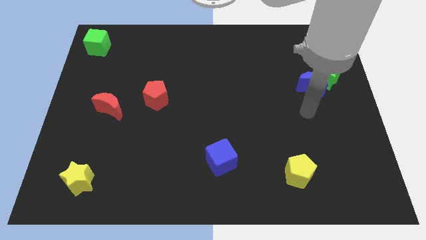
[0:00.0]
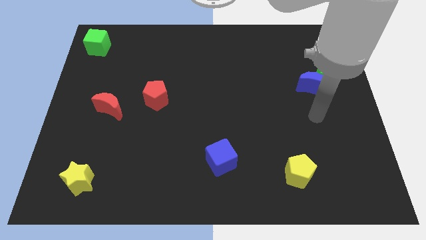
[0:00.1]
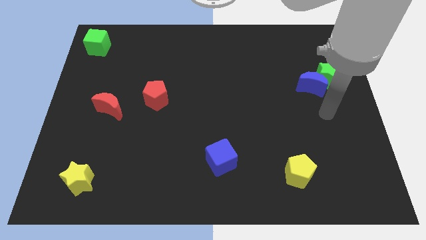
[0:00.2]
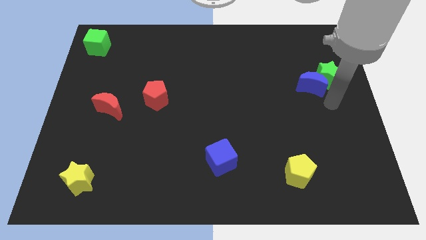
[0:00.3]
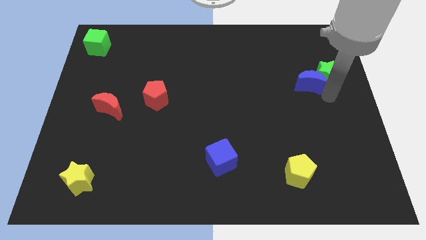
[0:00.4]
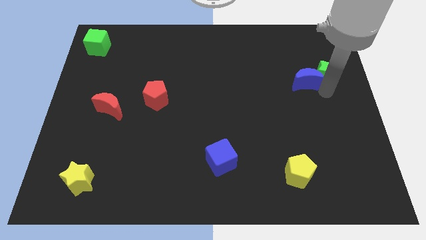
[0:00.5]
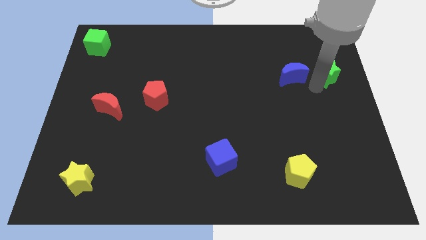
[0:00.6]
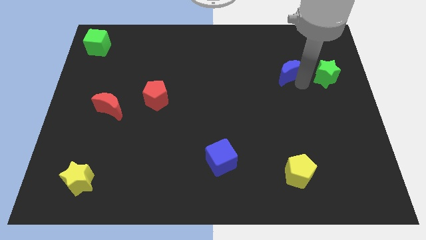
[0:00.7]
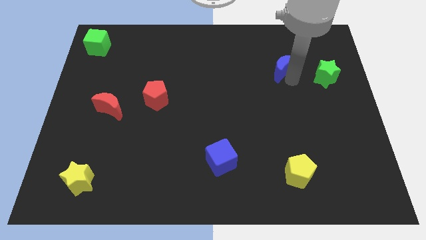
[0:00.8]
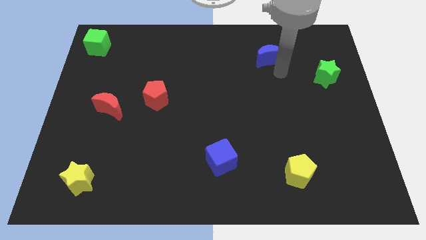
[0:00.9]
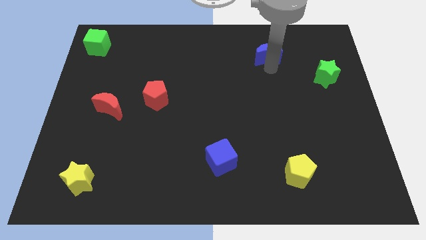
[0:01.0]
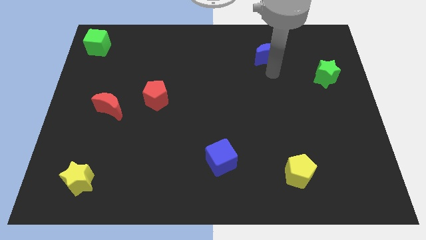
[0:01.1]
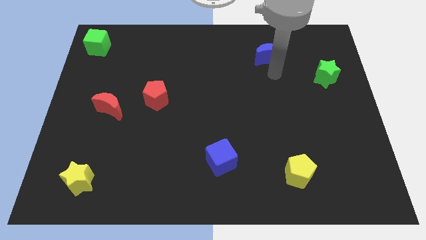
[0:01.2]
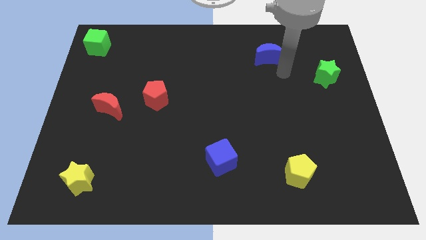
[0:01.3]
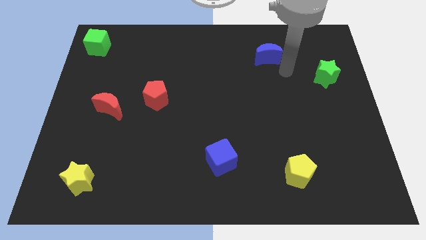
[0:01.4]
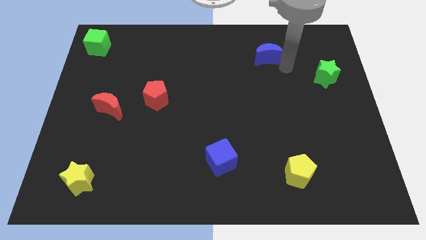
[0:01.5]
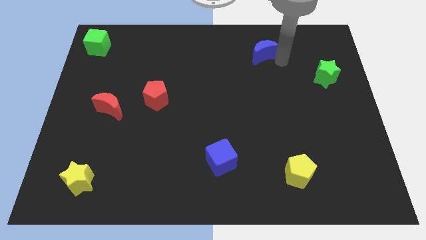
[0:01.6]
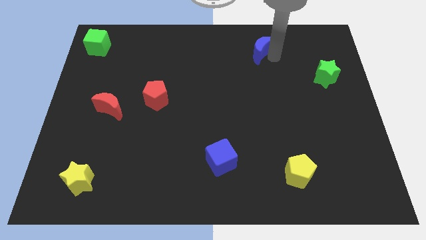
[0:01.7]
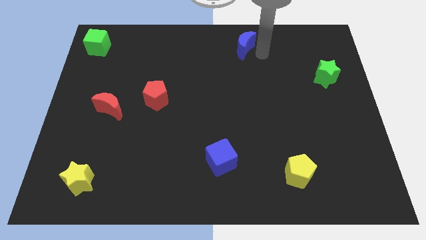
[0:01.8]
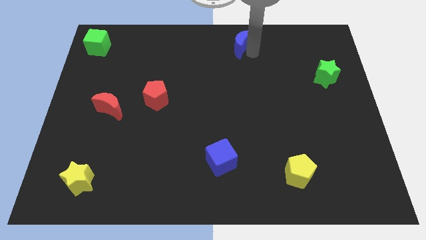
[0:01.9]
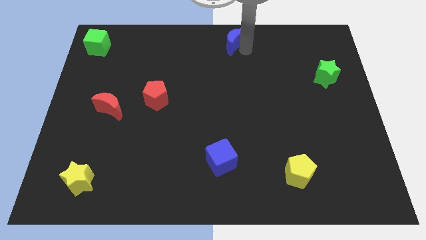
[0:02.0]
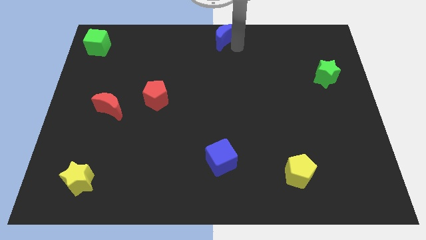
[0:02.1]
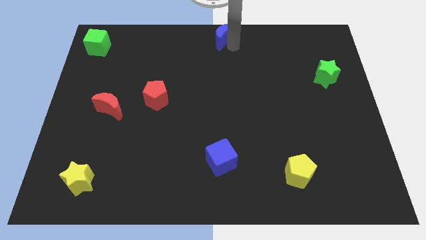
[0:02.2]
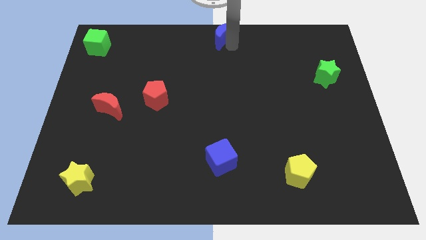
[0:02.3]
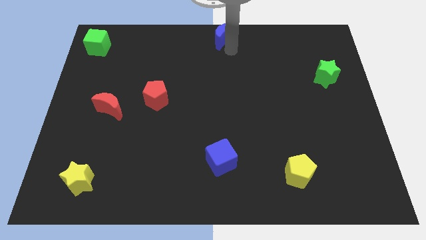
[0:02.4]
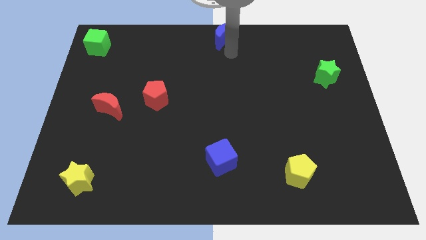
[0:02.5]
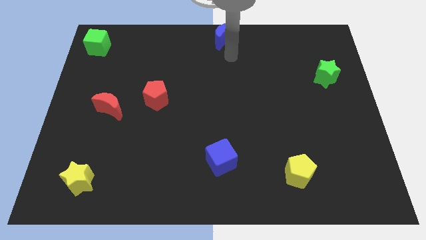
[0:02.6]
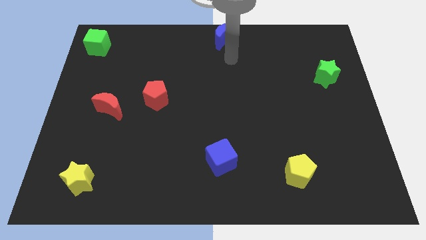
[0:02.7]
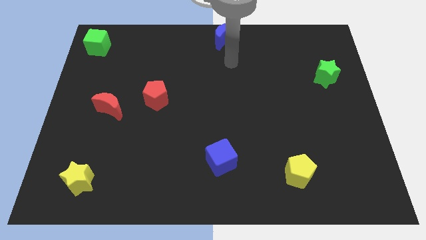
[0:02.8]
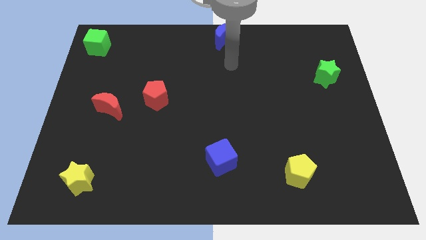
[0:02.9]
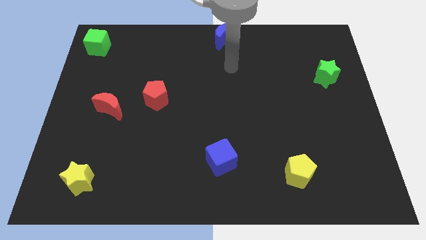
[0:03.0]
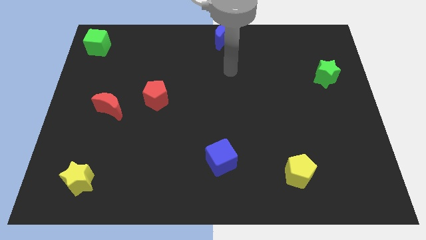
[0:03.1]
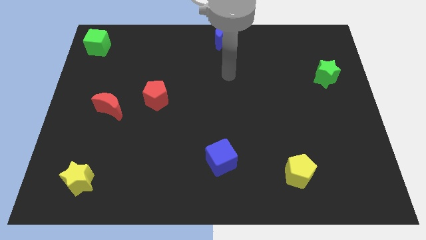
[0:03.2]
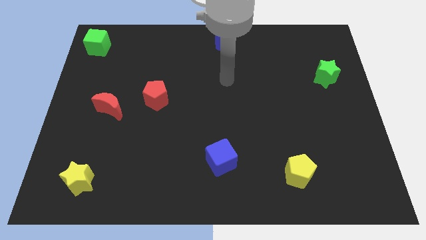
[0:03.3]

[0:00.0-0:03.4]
separate blue moon from green star

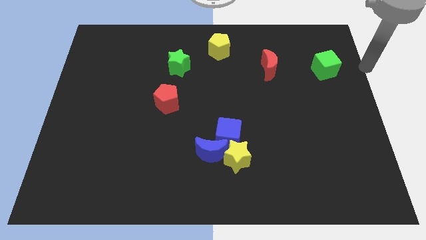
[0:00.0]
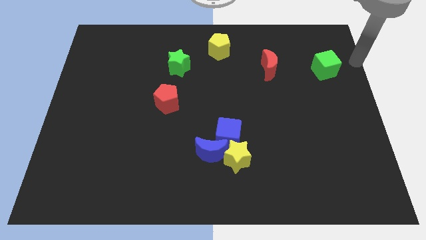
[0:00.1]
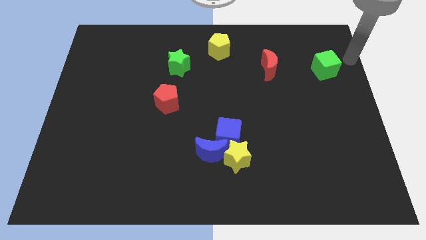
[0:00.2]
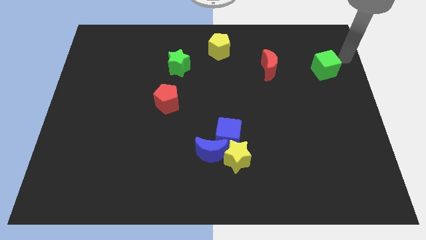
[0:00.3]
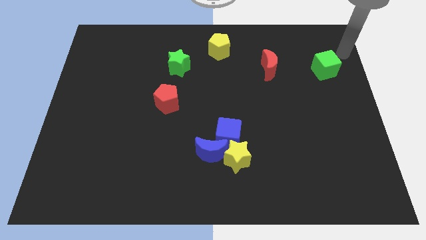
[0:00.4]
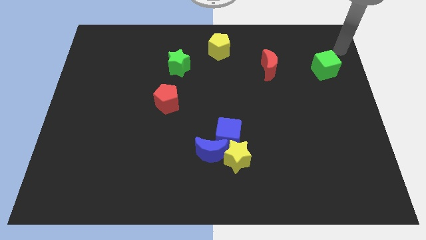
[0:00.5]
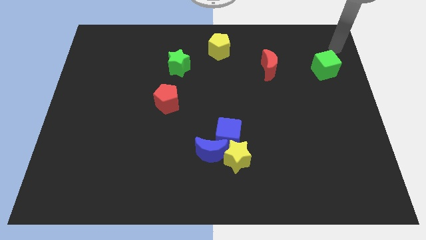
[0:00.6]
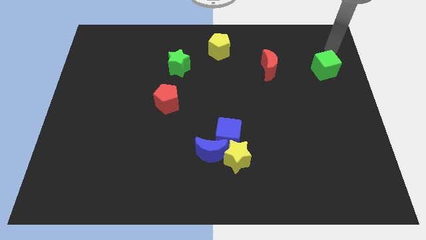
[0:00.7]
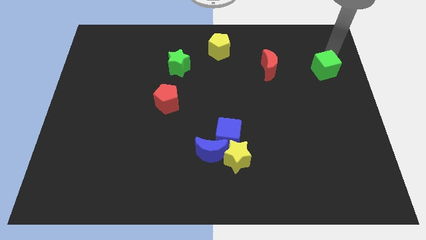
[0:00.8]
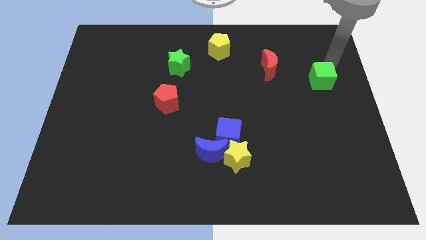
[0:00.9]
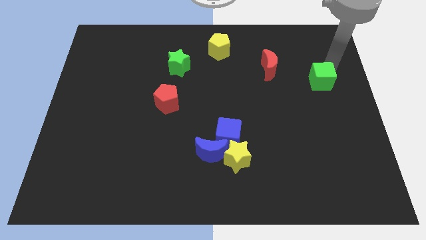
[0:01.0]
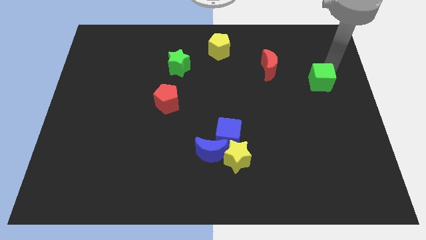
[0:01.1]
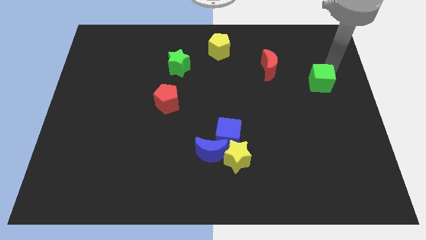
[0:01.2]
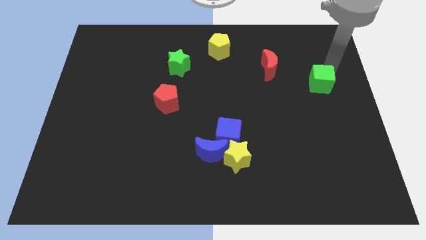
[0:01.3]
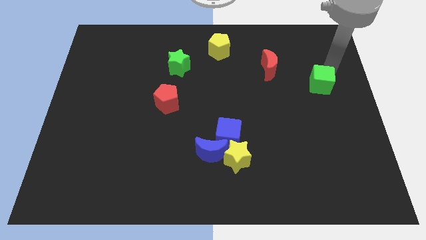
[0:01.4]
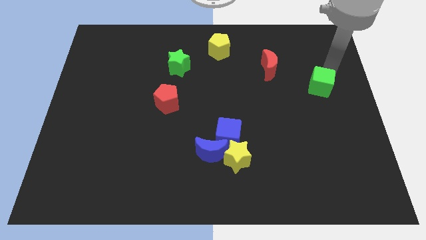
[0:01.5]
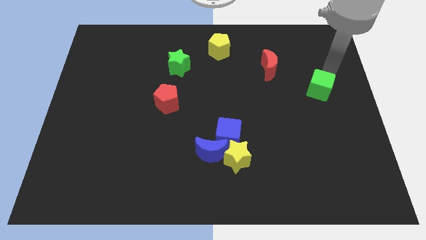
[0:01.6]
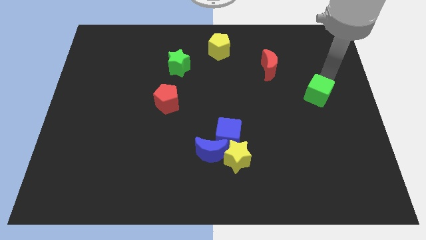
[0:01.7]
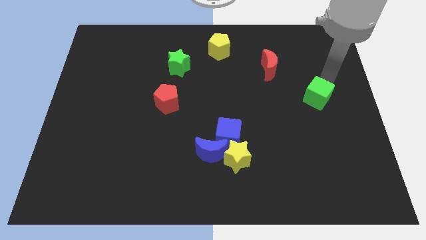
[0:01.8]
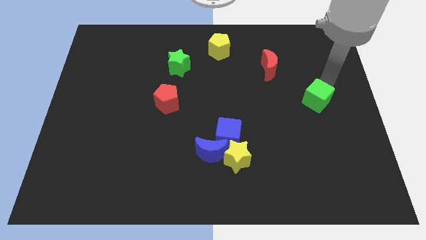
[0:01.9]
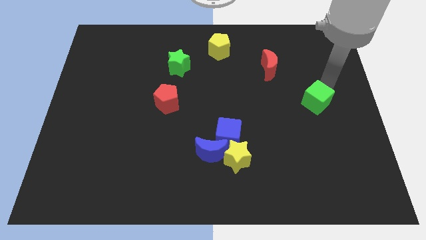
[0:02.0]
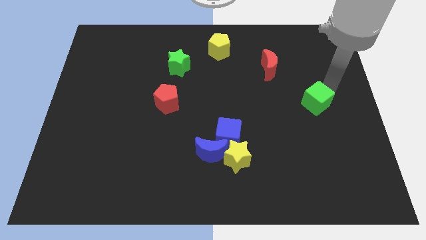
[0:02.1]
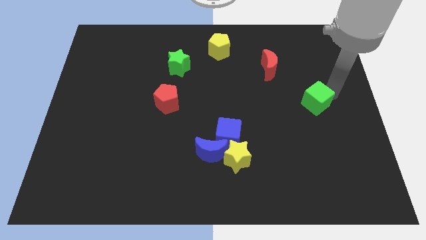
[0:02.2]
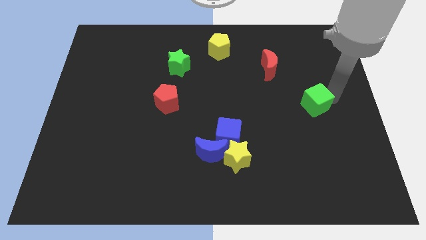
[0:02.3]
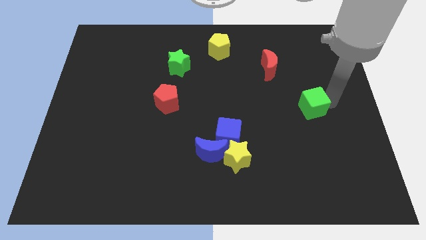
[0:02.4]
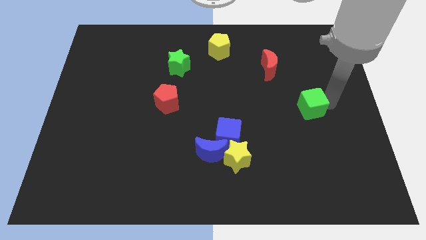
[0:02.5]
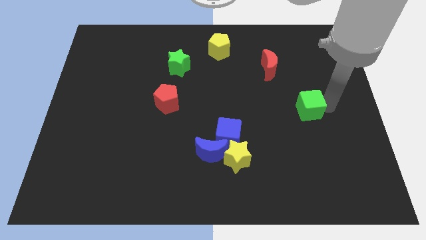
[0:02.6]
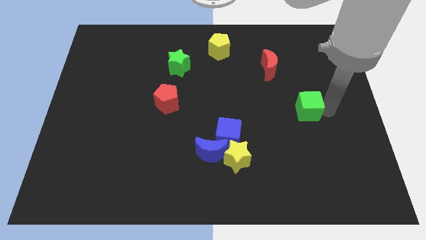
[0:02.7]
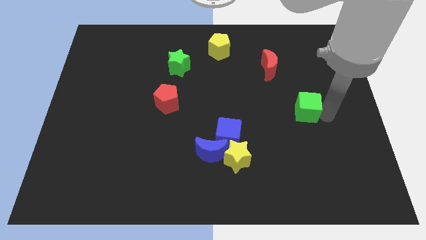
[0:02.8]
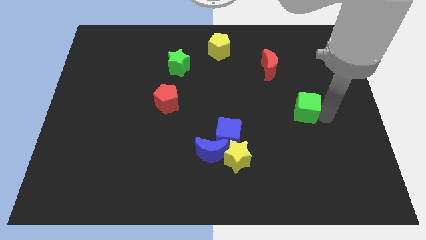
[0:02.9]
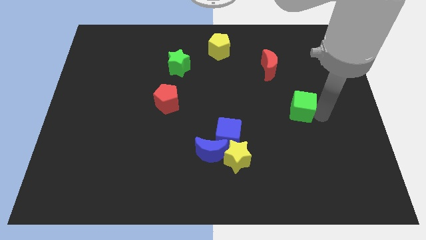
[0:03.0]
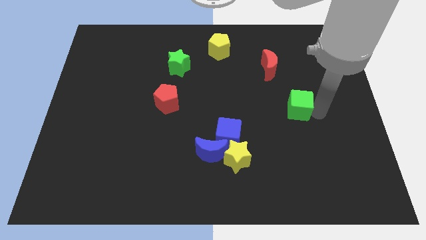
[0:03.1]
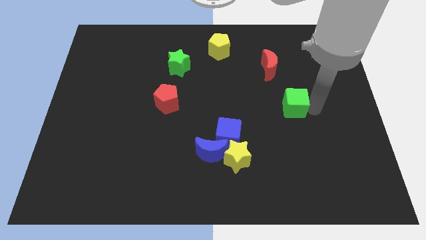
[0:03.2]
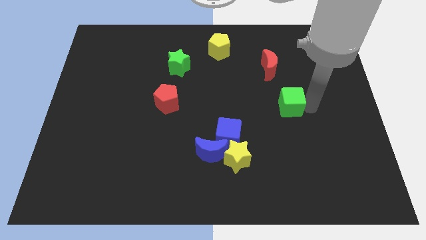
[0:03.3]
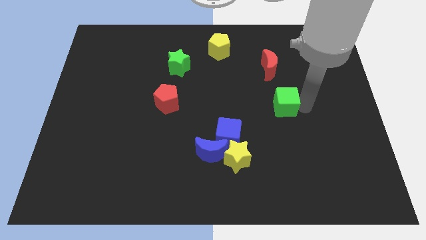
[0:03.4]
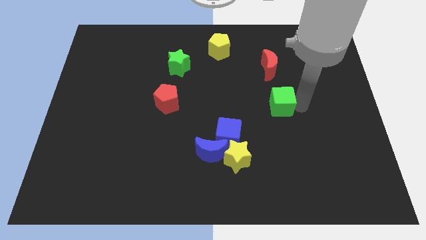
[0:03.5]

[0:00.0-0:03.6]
move the green cube below the red moon

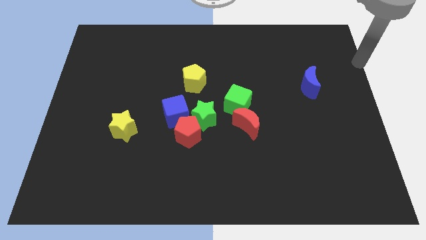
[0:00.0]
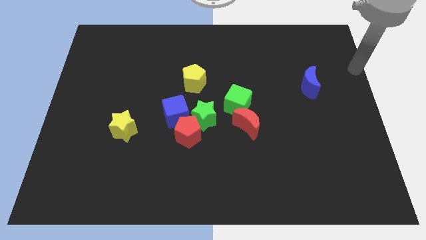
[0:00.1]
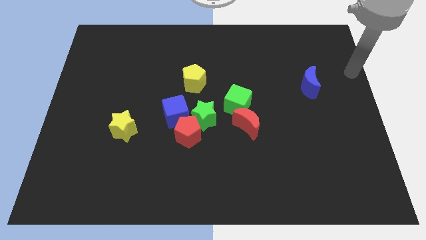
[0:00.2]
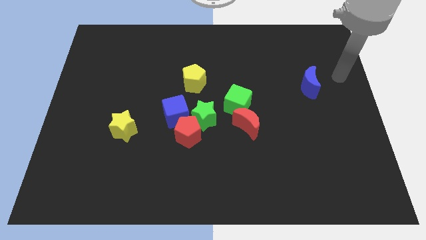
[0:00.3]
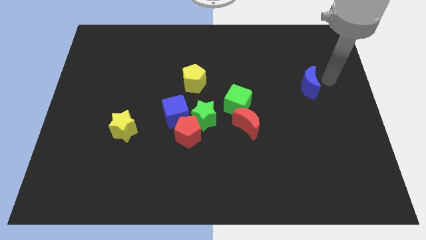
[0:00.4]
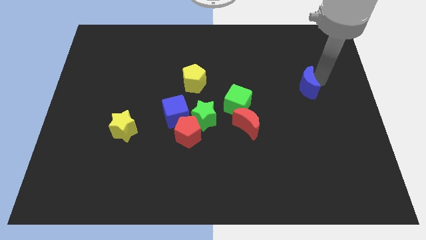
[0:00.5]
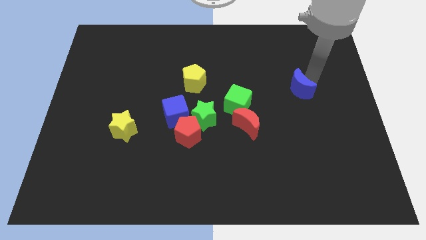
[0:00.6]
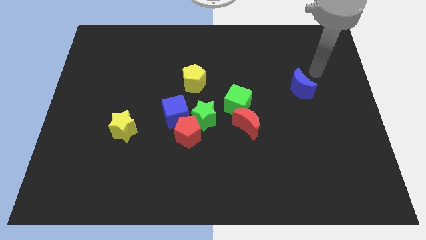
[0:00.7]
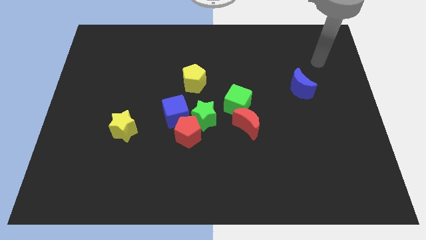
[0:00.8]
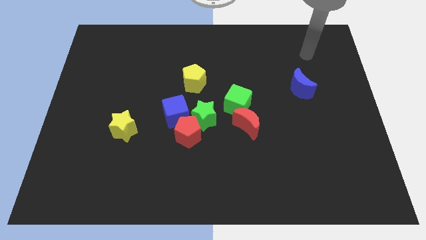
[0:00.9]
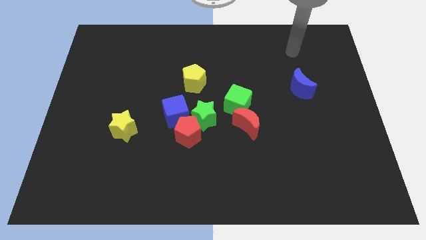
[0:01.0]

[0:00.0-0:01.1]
move the blue moon slightly to the left side

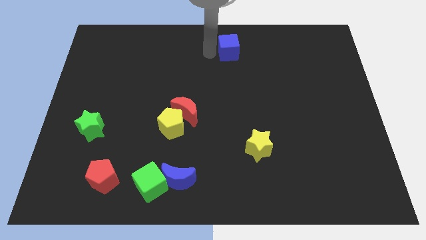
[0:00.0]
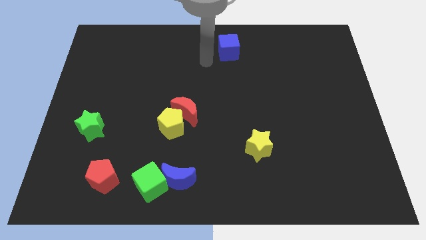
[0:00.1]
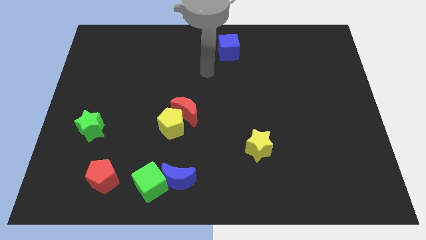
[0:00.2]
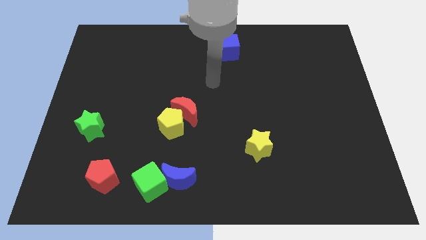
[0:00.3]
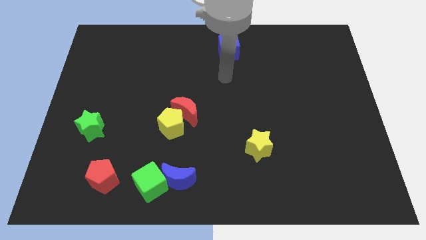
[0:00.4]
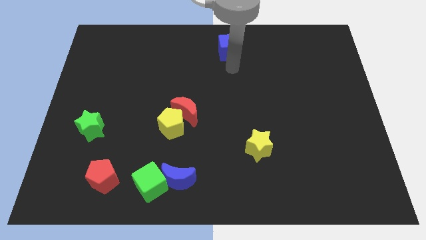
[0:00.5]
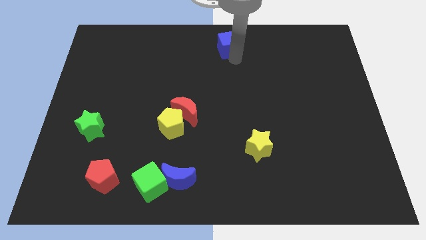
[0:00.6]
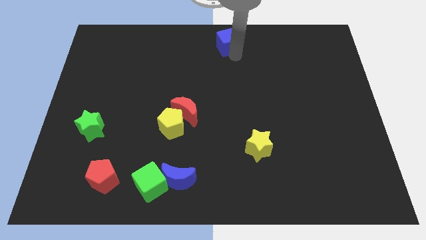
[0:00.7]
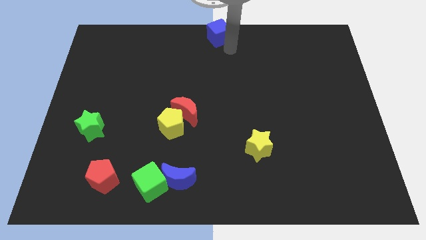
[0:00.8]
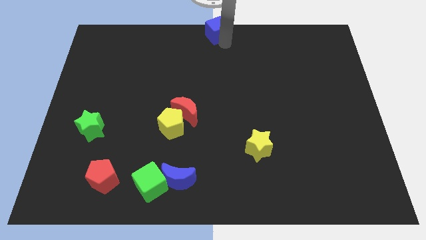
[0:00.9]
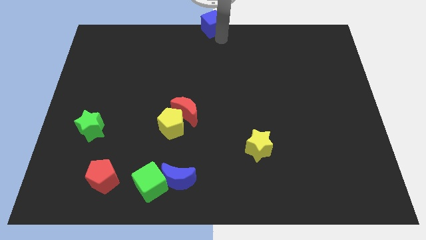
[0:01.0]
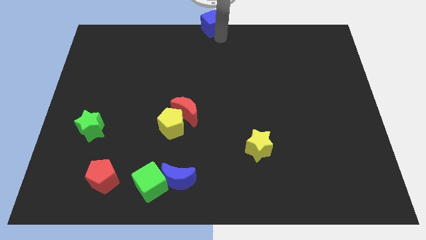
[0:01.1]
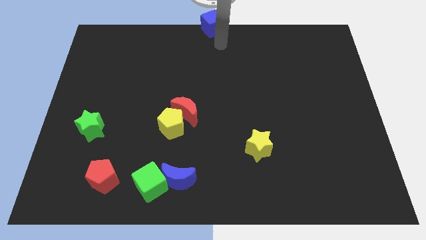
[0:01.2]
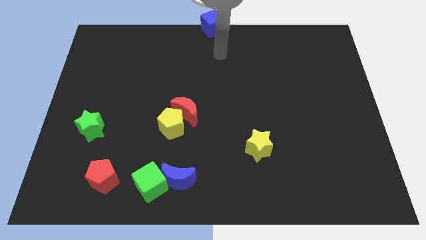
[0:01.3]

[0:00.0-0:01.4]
move the blue cube to the top center of the board
